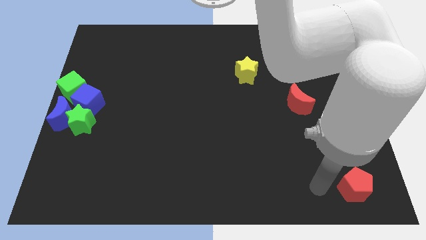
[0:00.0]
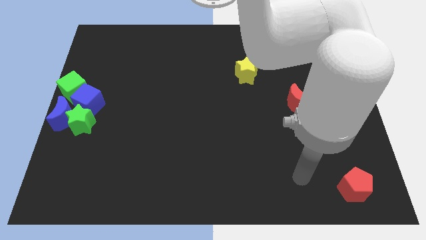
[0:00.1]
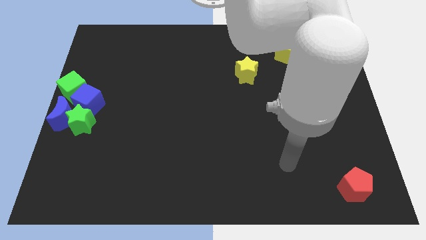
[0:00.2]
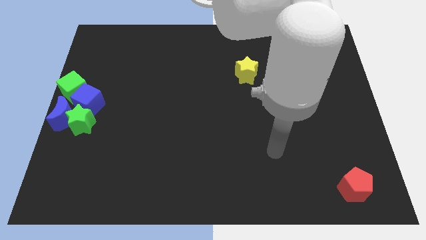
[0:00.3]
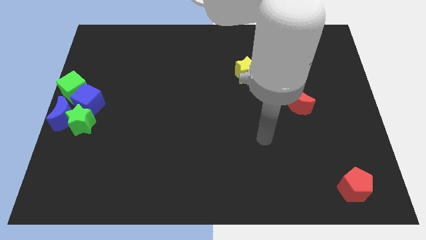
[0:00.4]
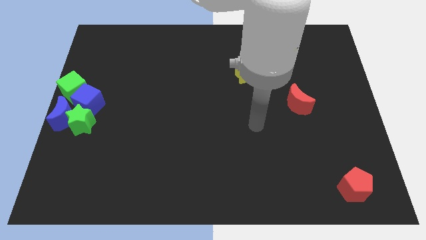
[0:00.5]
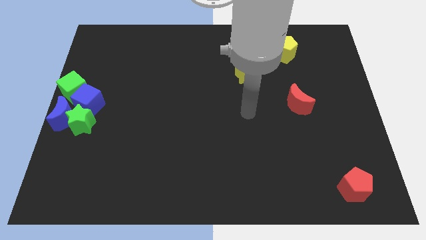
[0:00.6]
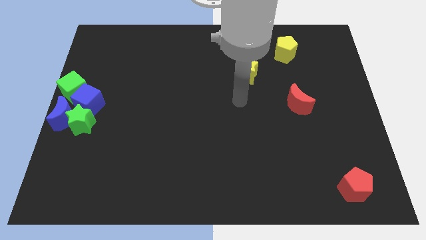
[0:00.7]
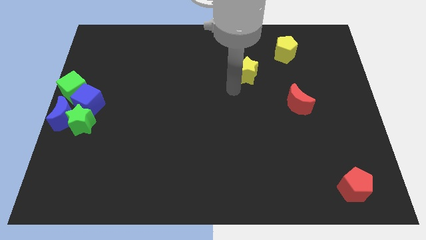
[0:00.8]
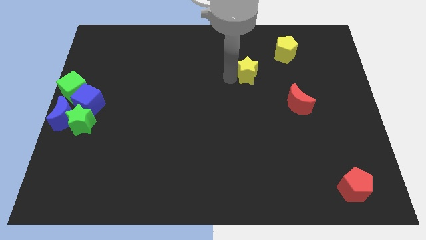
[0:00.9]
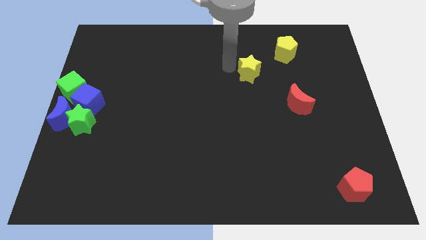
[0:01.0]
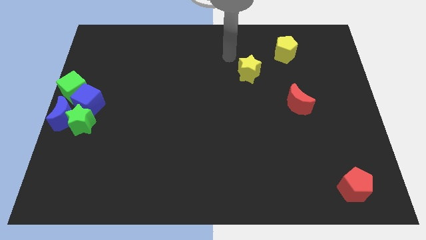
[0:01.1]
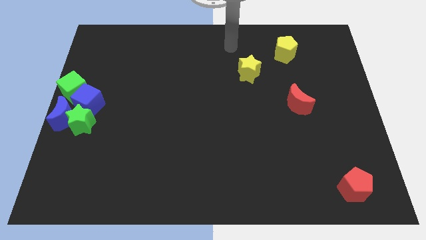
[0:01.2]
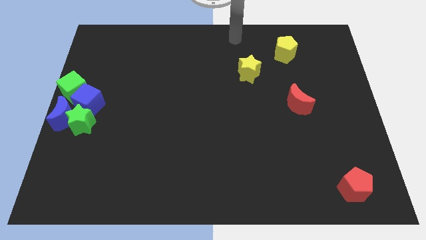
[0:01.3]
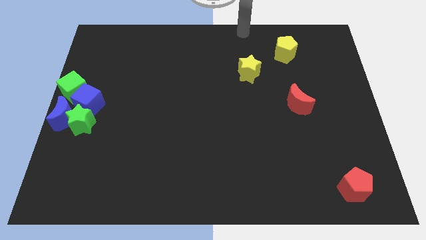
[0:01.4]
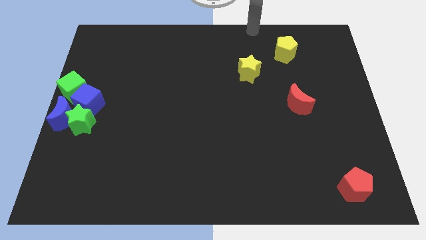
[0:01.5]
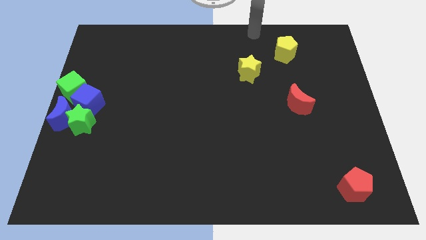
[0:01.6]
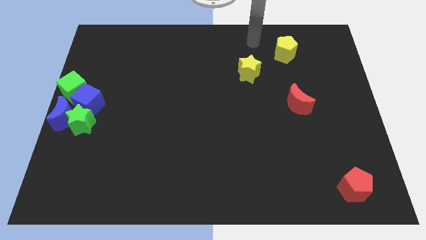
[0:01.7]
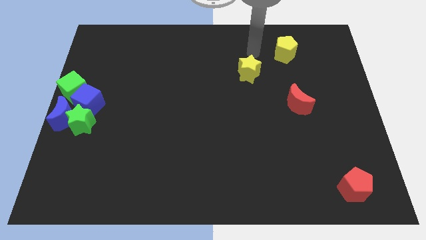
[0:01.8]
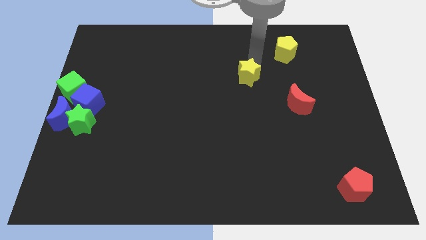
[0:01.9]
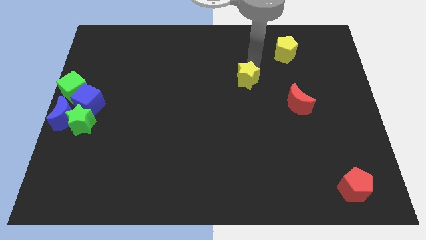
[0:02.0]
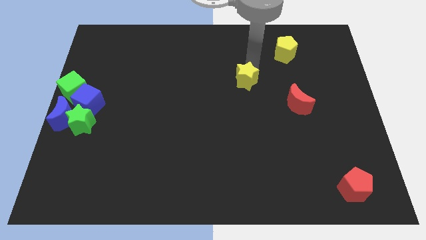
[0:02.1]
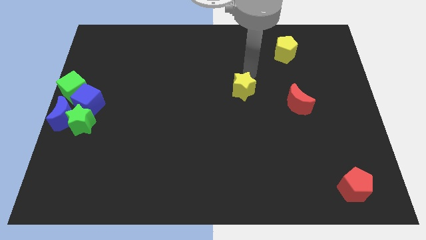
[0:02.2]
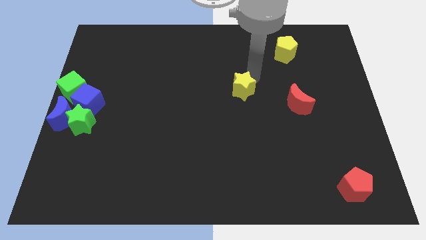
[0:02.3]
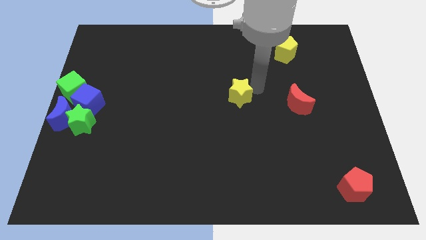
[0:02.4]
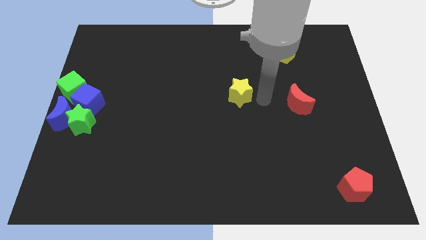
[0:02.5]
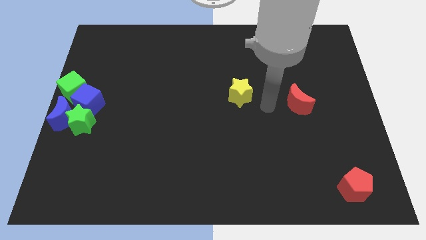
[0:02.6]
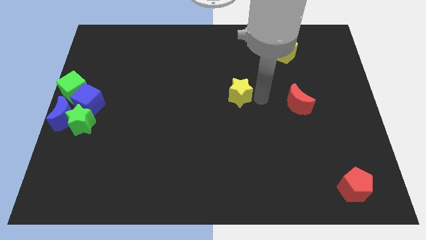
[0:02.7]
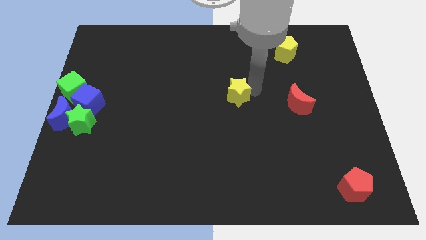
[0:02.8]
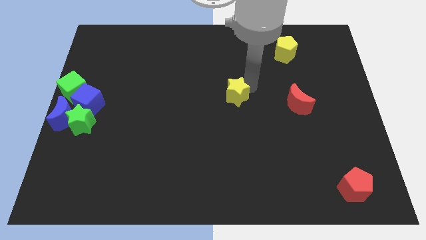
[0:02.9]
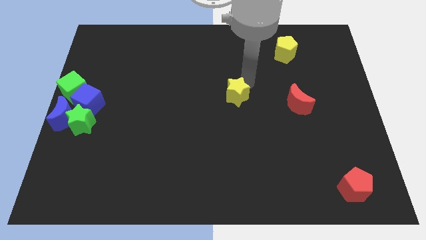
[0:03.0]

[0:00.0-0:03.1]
slide yellow star towards center

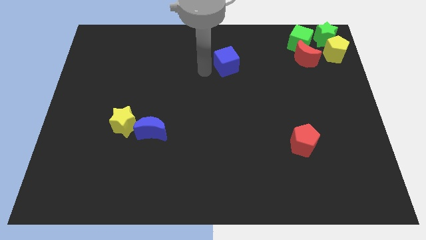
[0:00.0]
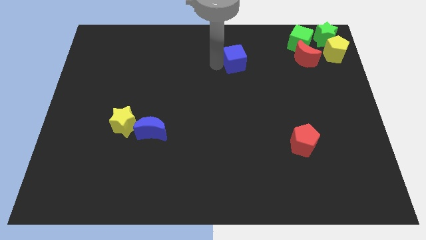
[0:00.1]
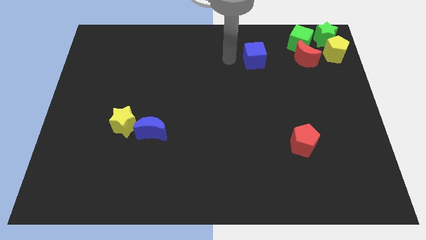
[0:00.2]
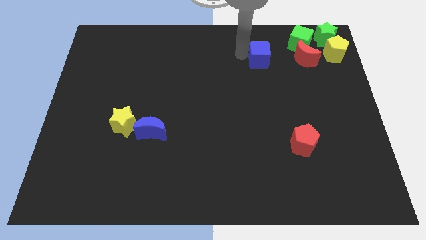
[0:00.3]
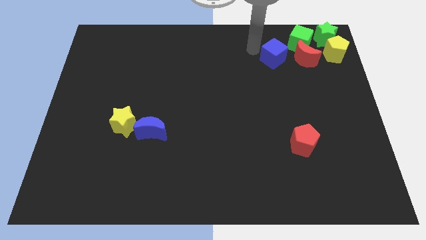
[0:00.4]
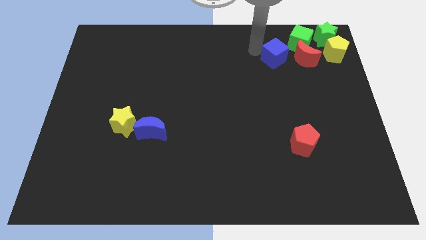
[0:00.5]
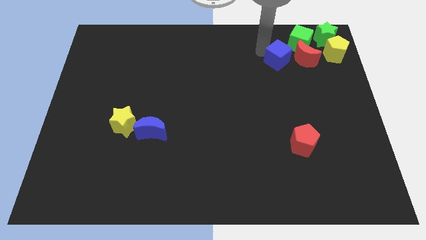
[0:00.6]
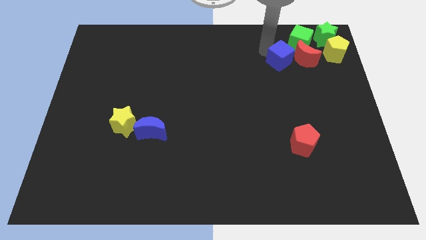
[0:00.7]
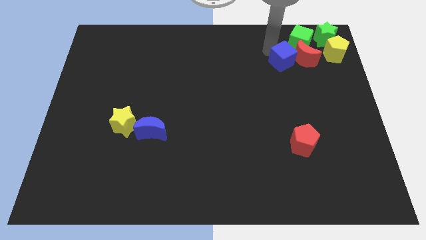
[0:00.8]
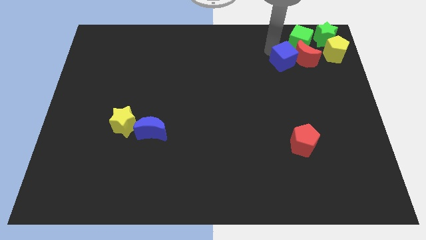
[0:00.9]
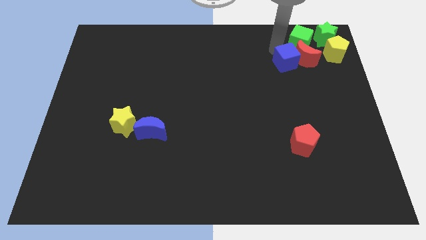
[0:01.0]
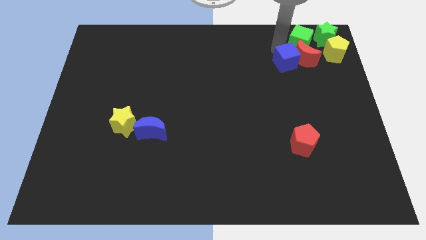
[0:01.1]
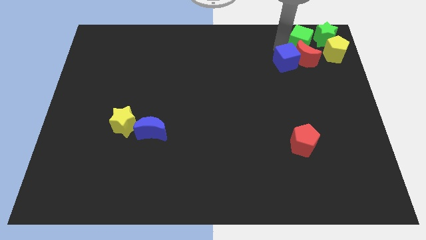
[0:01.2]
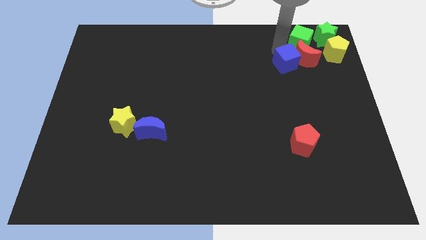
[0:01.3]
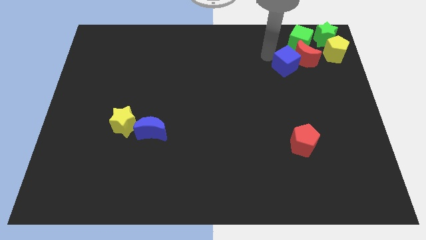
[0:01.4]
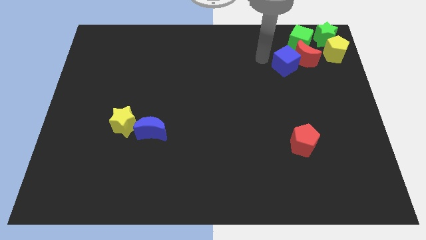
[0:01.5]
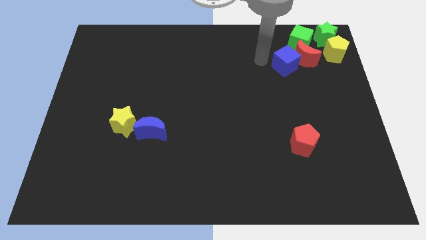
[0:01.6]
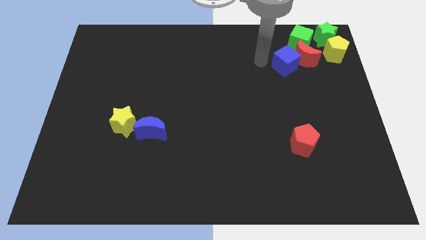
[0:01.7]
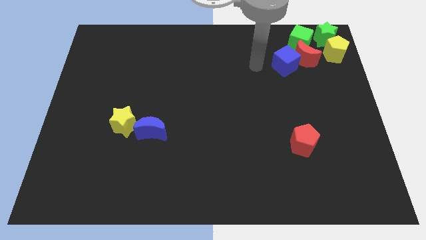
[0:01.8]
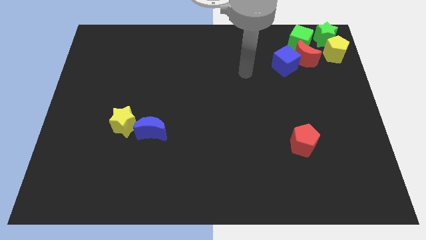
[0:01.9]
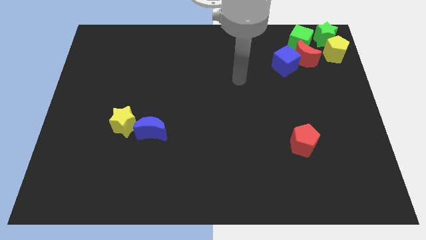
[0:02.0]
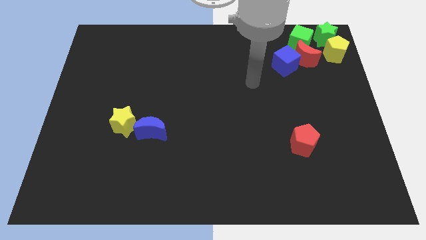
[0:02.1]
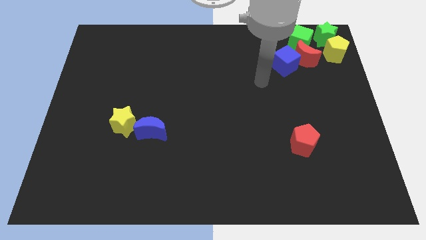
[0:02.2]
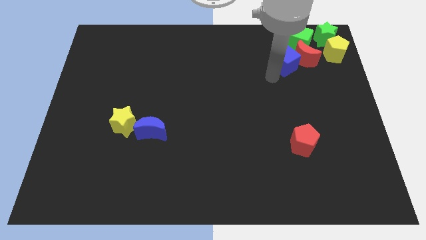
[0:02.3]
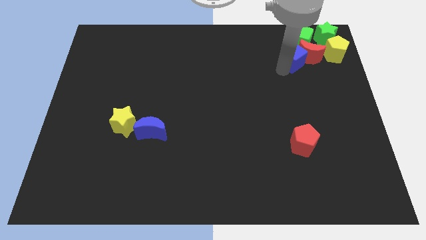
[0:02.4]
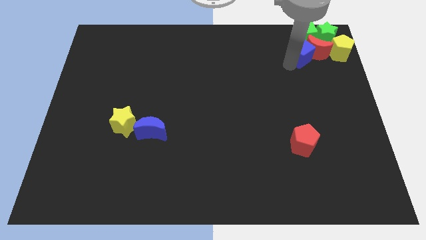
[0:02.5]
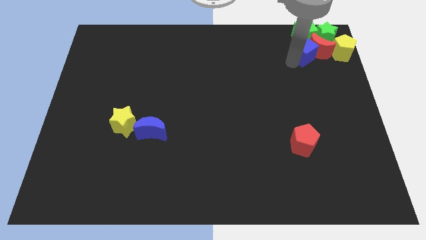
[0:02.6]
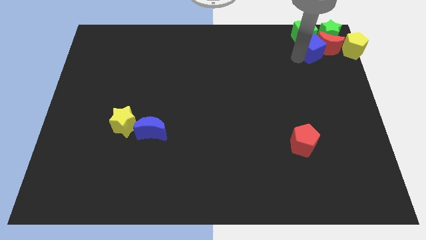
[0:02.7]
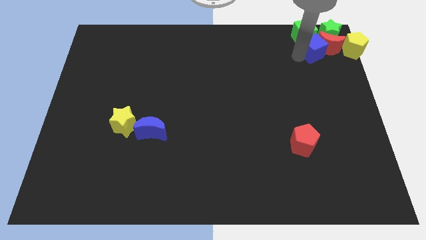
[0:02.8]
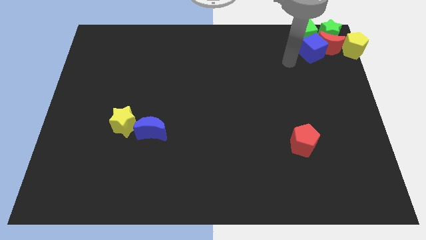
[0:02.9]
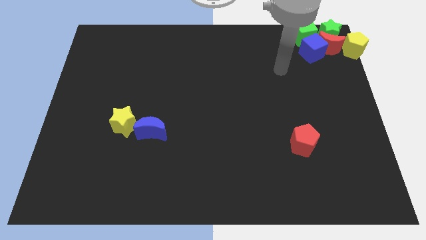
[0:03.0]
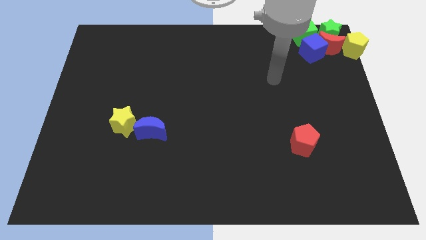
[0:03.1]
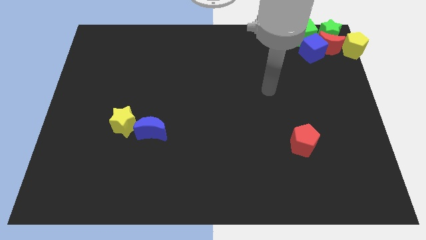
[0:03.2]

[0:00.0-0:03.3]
move the blue cube to the bottom of the green cube

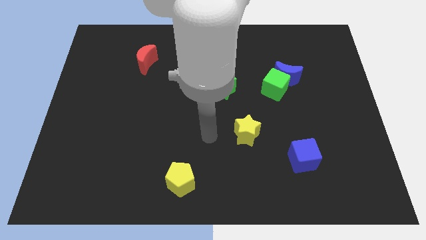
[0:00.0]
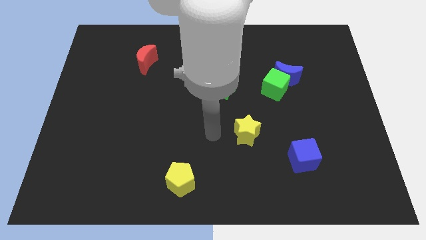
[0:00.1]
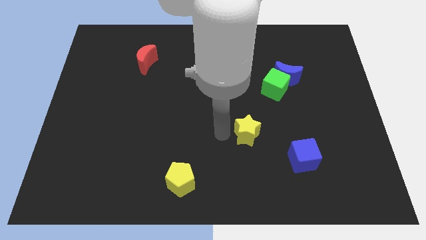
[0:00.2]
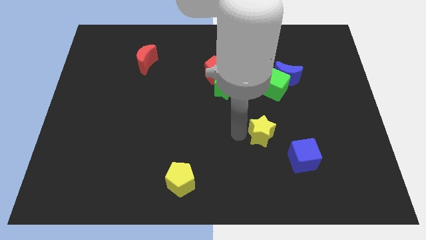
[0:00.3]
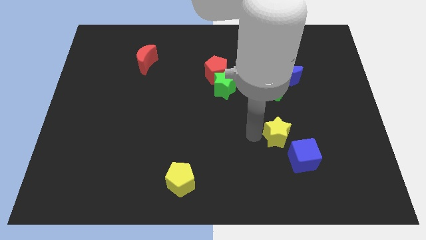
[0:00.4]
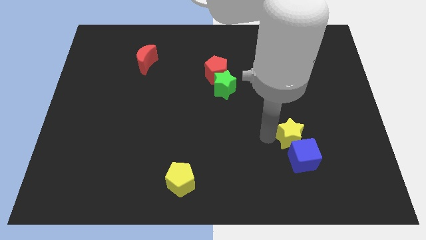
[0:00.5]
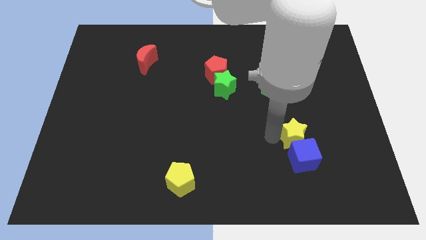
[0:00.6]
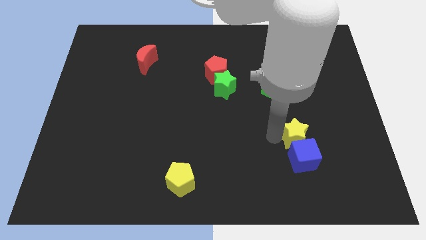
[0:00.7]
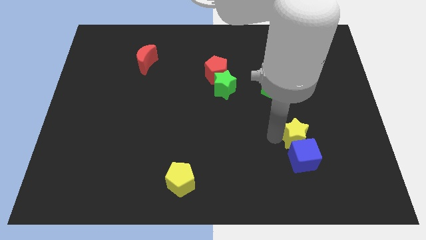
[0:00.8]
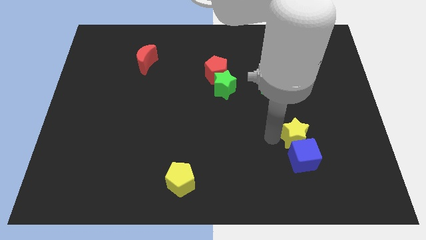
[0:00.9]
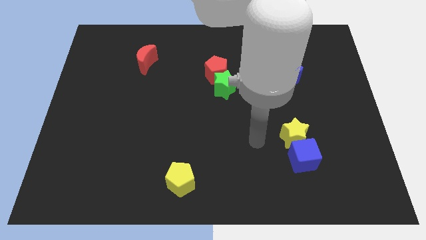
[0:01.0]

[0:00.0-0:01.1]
push the yellow star vertically above the blue cube

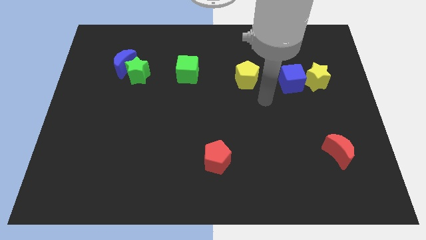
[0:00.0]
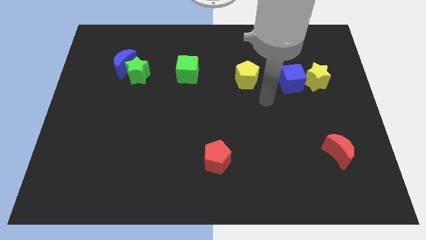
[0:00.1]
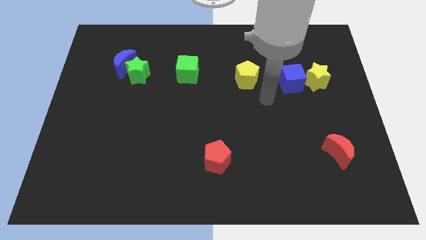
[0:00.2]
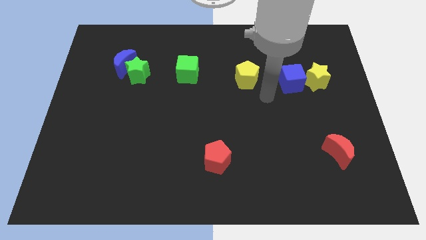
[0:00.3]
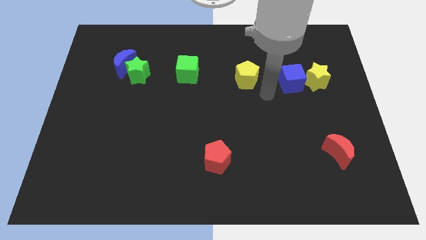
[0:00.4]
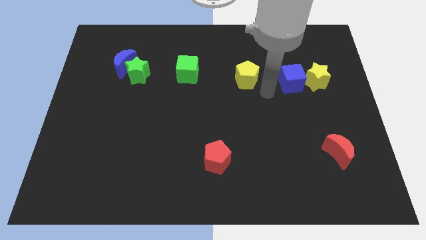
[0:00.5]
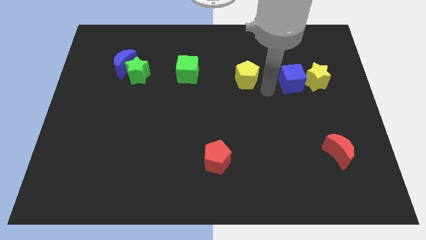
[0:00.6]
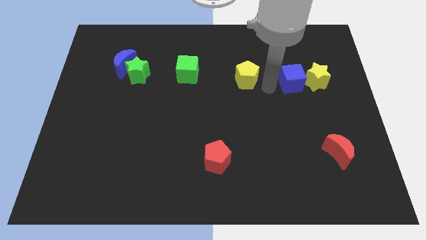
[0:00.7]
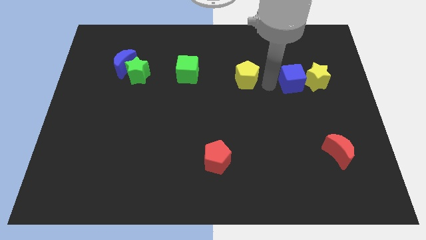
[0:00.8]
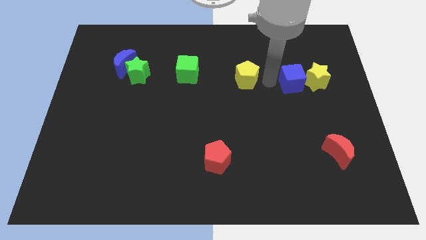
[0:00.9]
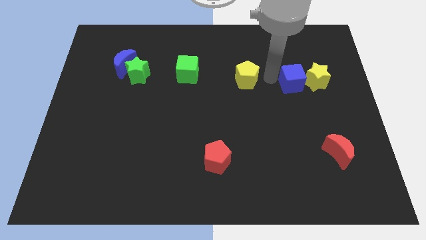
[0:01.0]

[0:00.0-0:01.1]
put your hand in between the yellow pentagon and blue cube

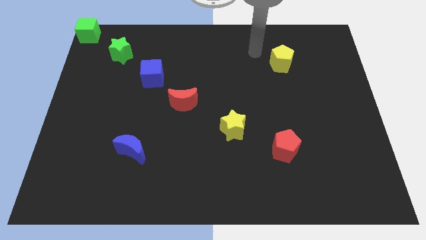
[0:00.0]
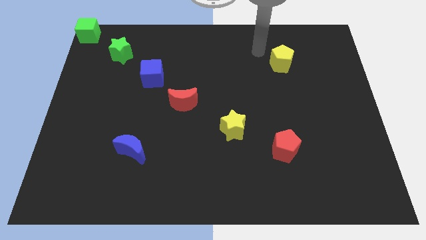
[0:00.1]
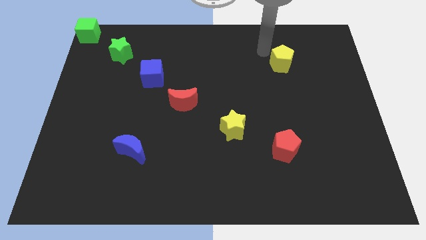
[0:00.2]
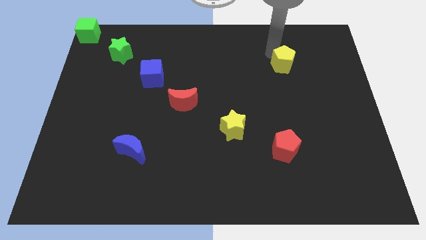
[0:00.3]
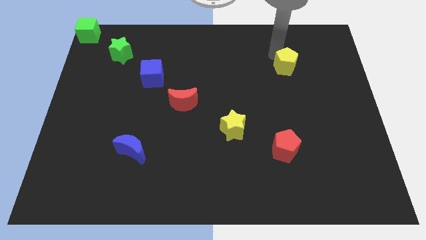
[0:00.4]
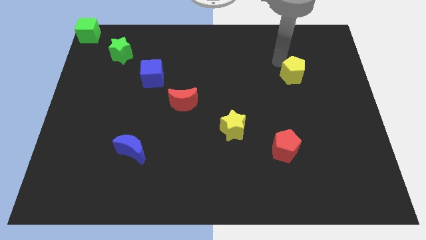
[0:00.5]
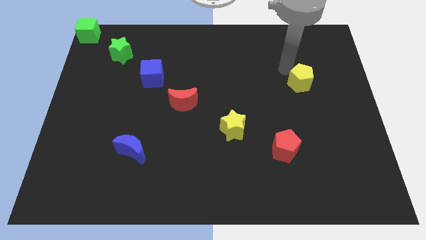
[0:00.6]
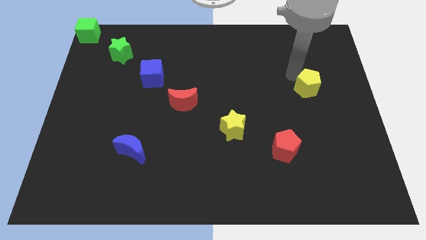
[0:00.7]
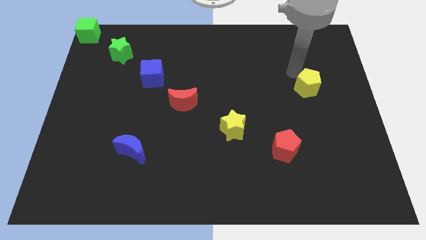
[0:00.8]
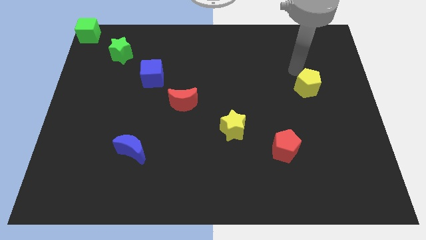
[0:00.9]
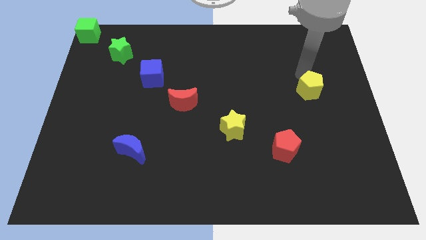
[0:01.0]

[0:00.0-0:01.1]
place the yellow pentagon above the red pentagon
